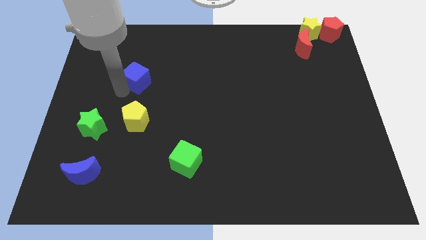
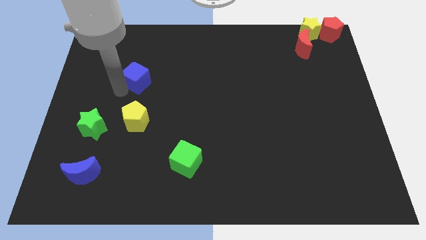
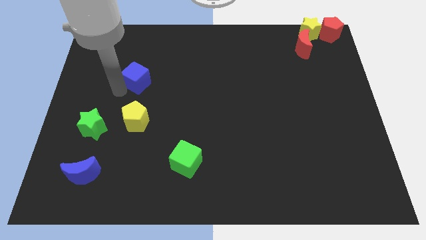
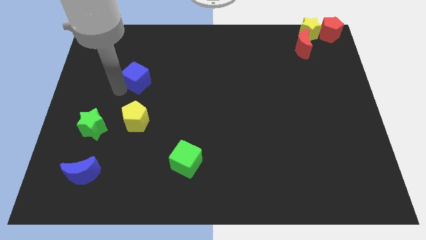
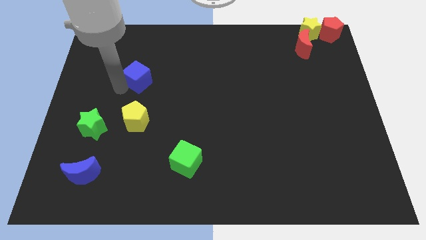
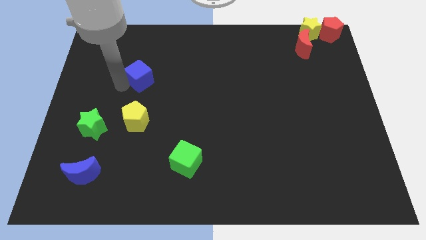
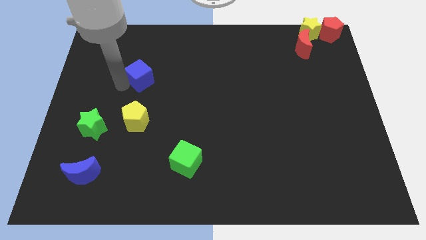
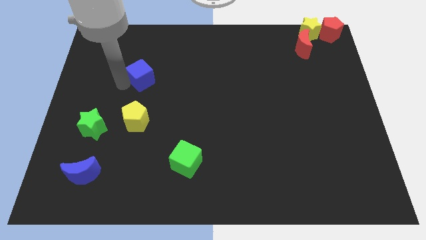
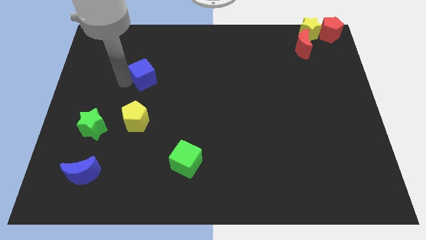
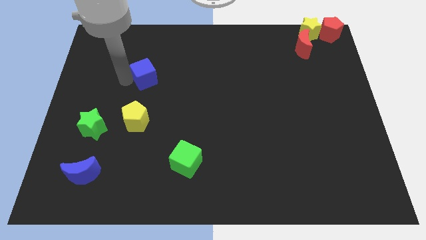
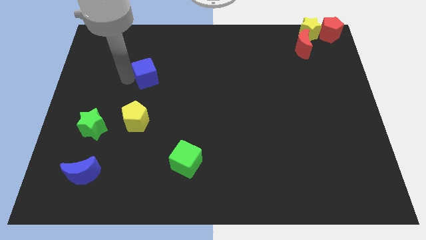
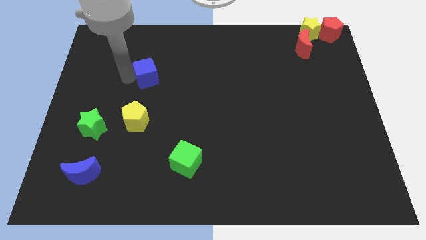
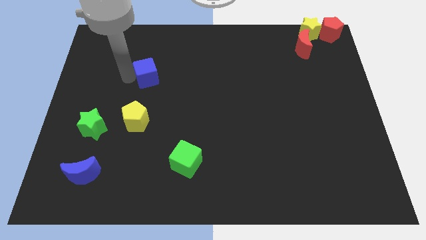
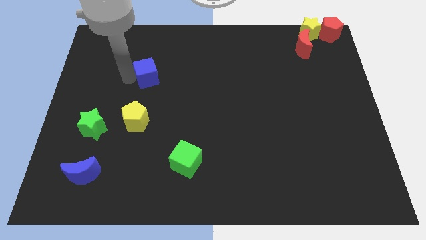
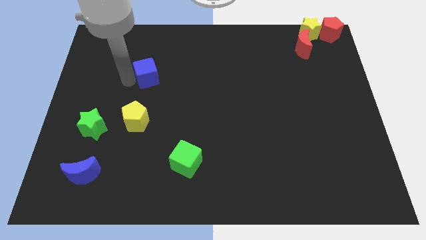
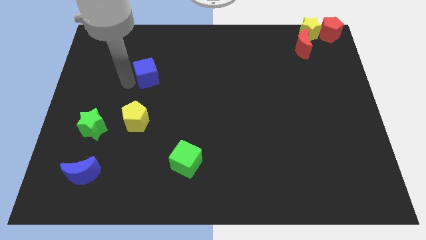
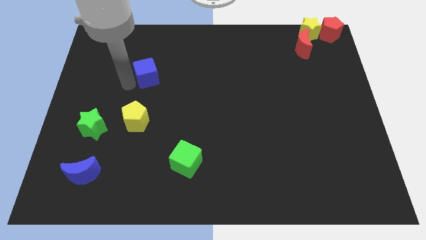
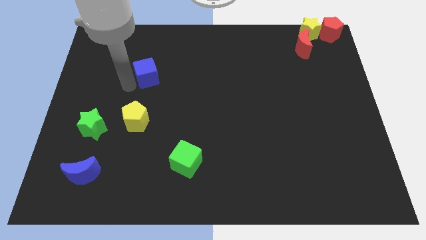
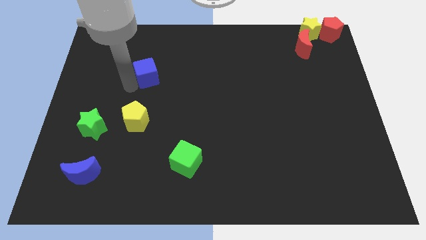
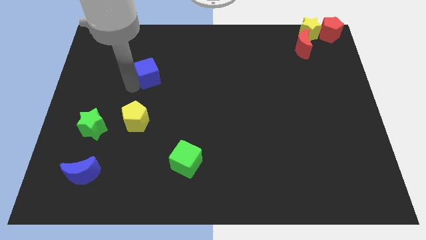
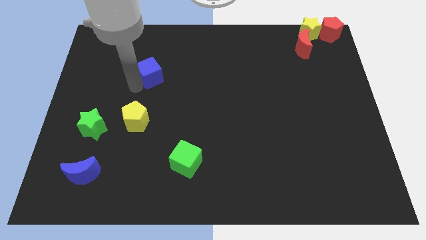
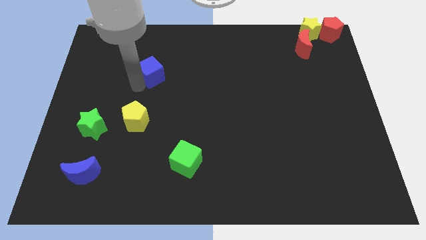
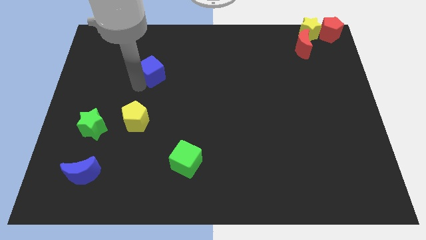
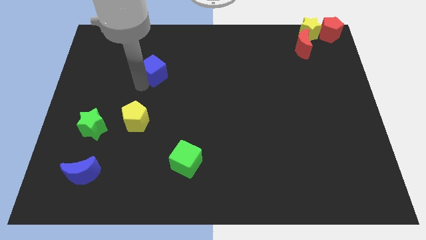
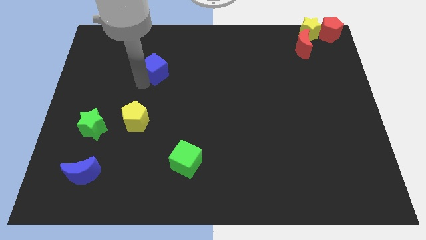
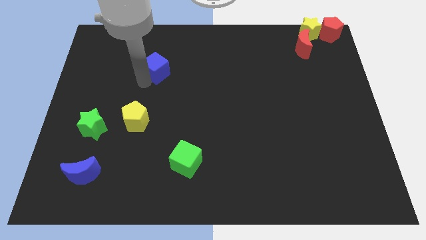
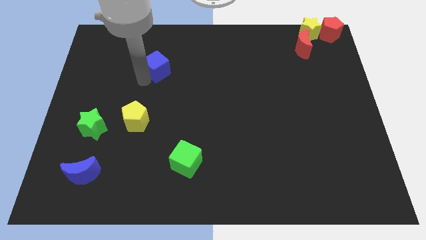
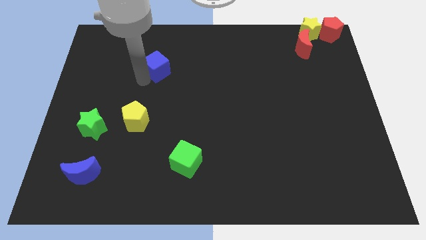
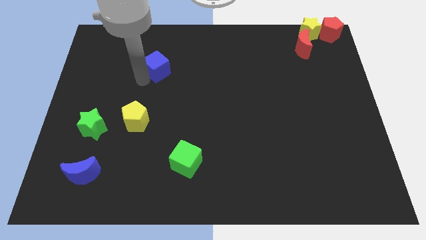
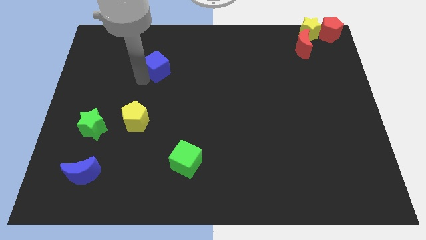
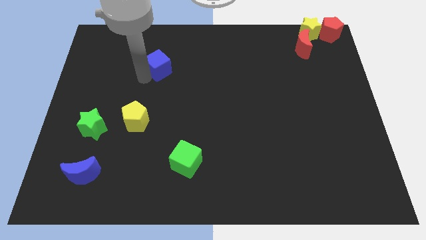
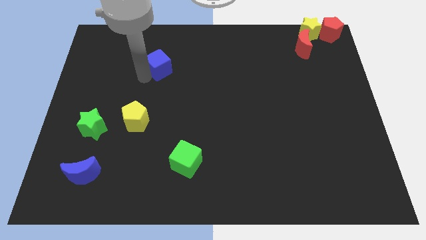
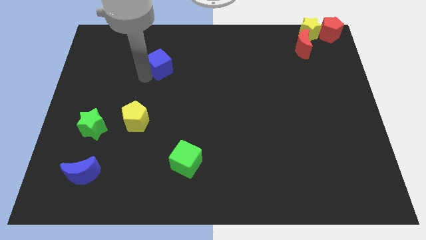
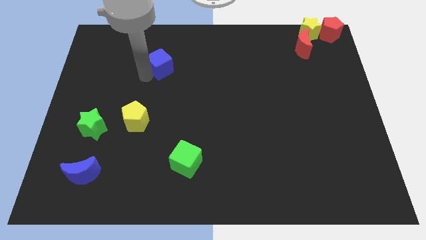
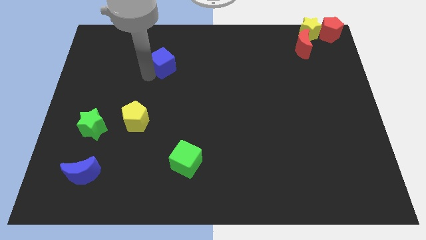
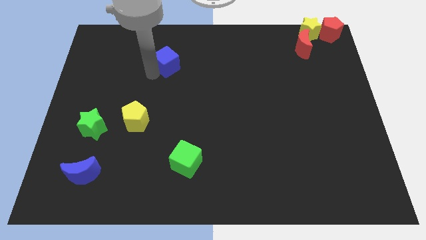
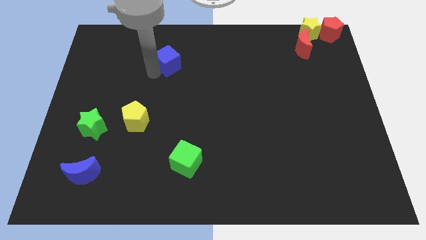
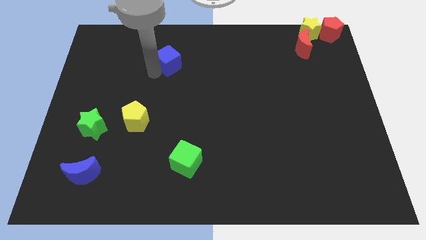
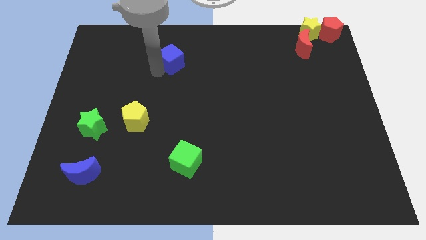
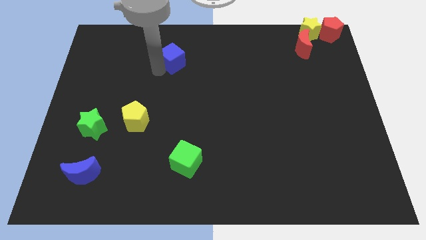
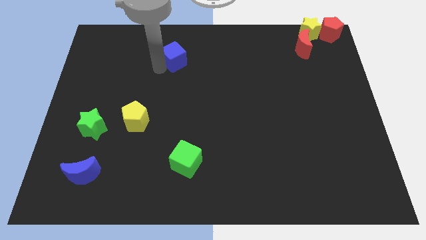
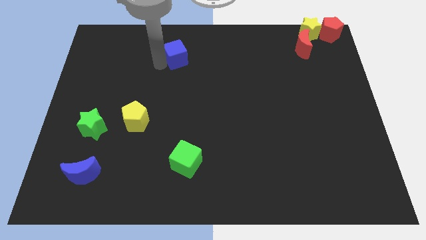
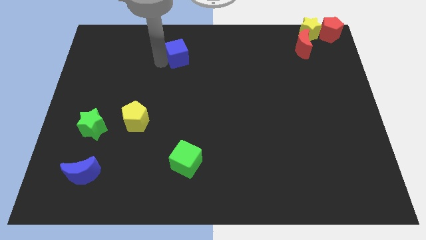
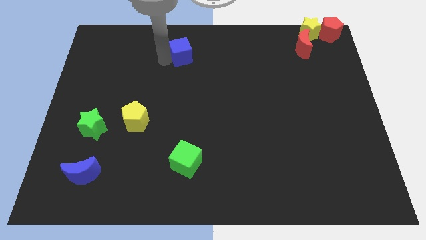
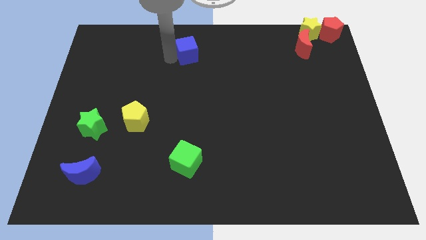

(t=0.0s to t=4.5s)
place the blue cube diagonal to the yellow pentagon

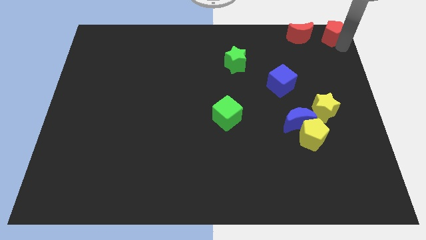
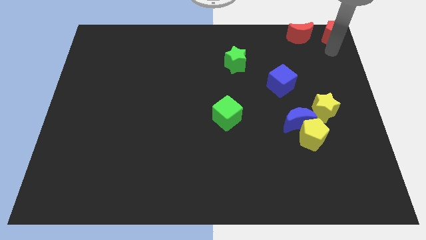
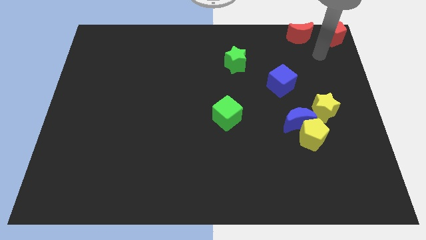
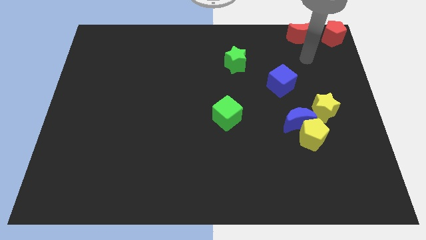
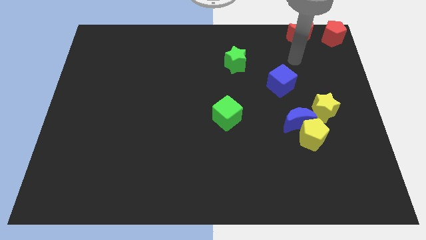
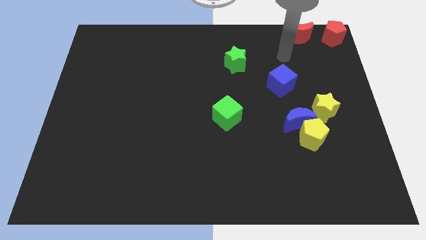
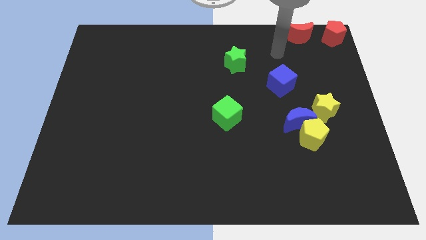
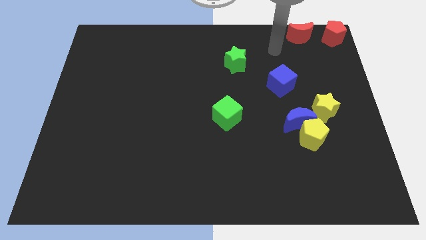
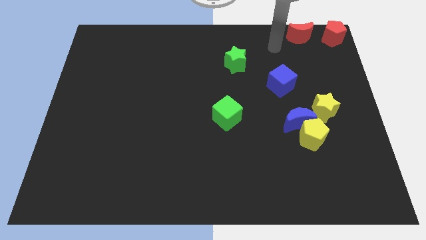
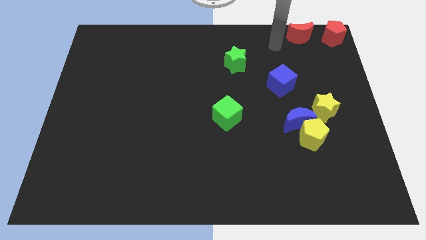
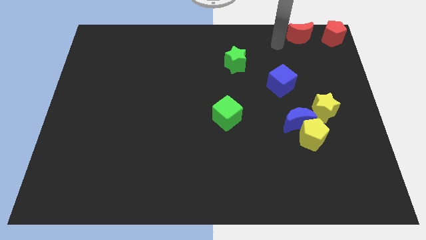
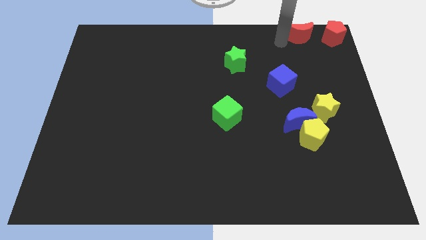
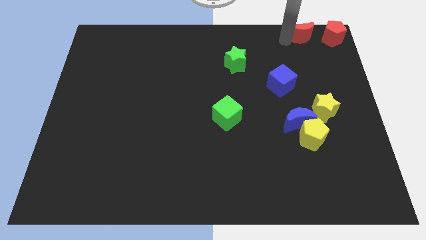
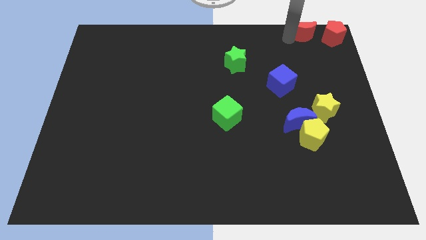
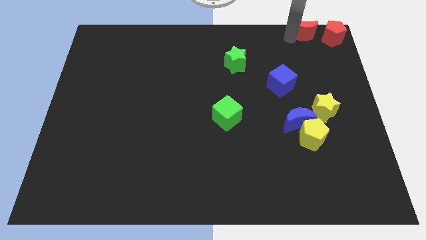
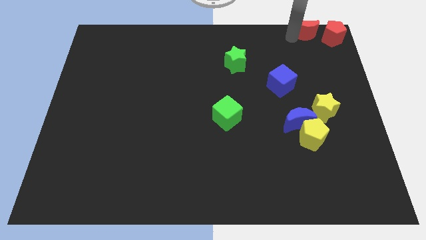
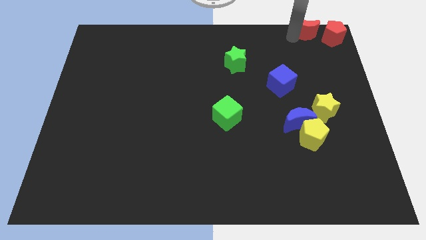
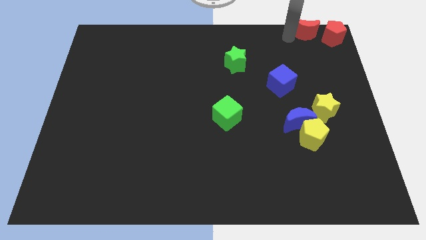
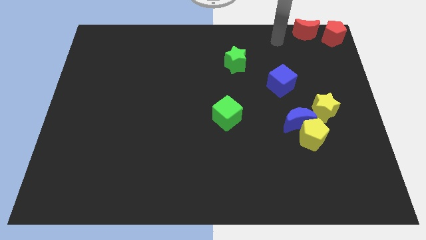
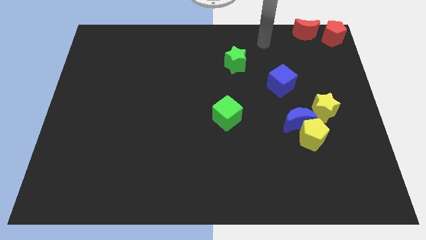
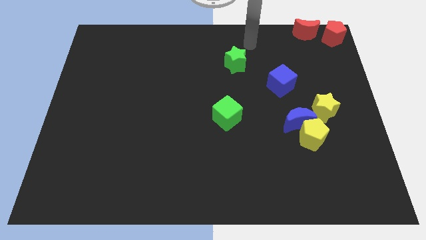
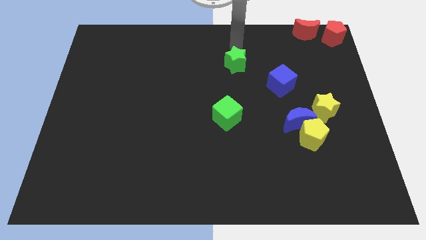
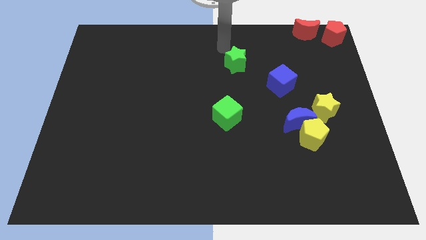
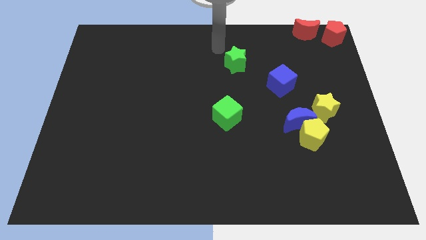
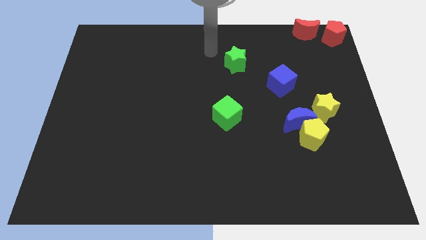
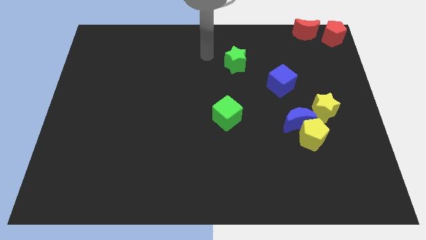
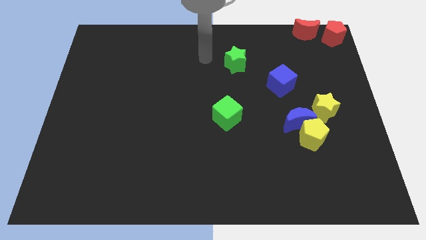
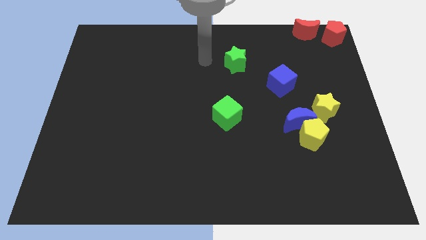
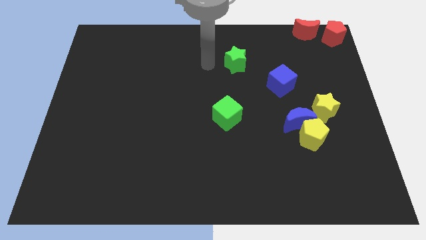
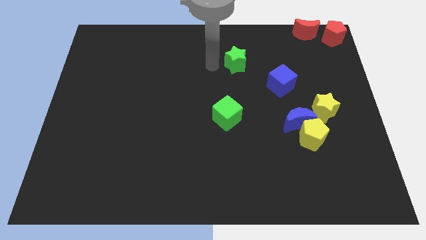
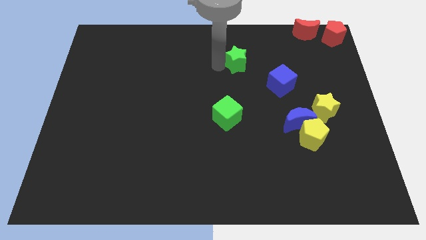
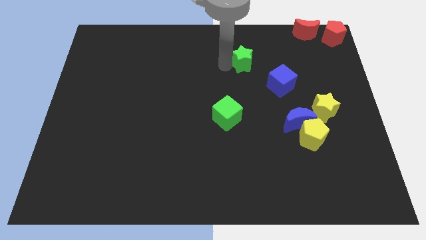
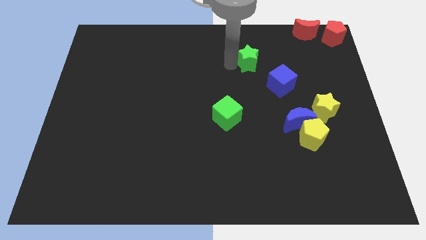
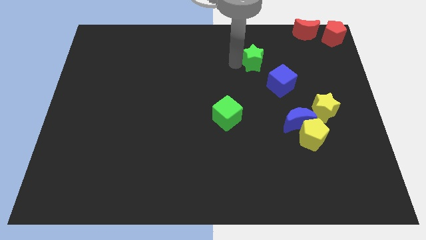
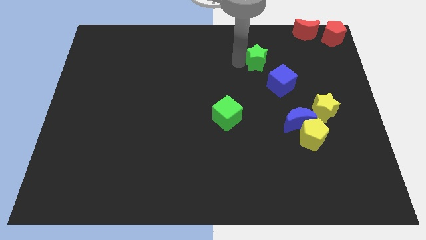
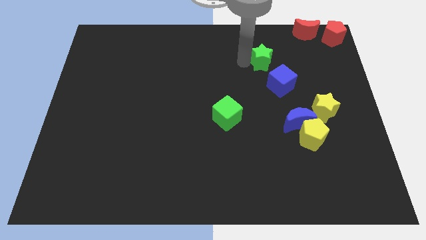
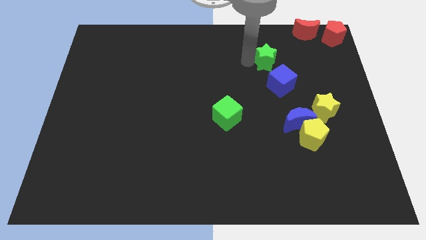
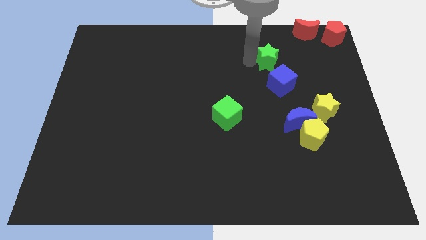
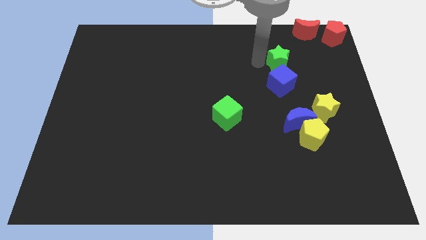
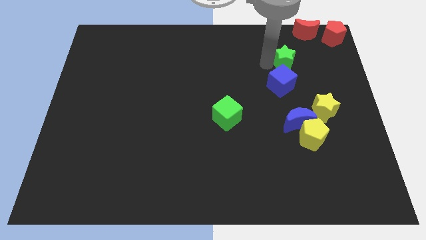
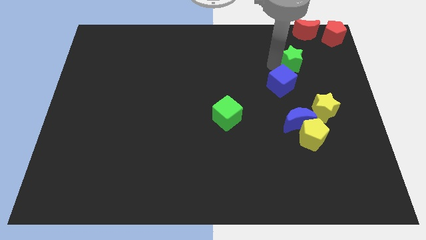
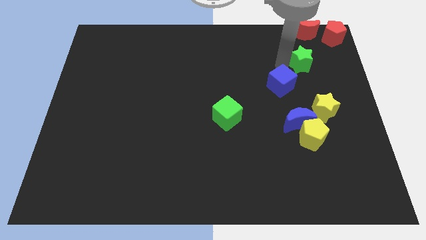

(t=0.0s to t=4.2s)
move the green star to the top of the blue cube

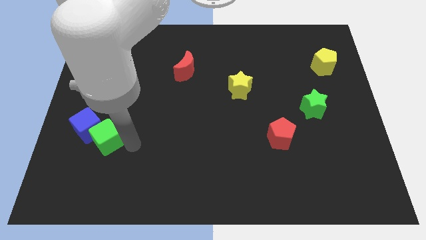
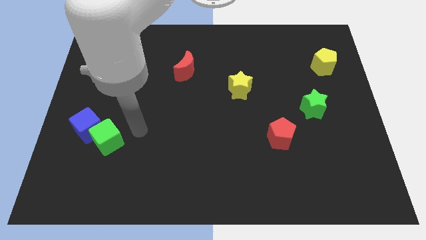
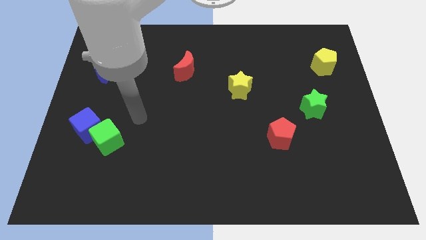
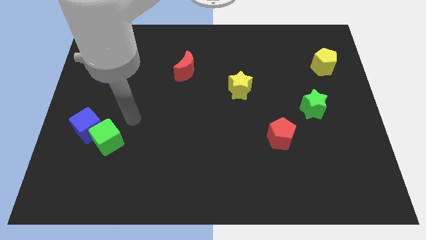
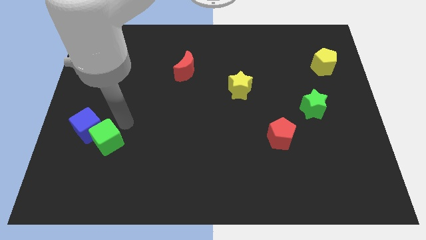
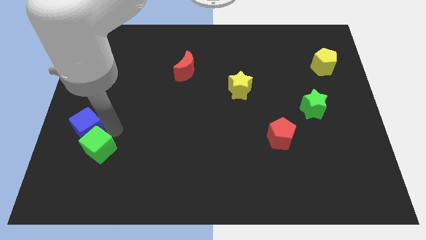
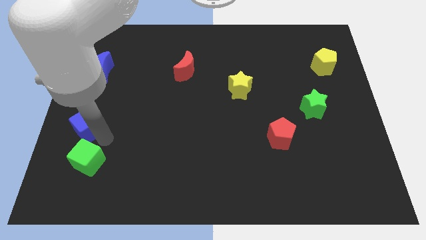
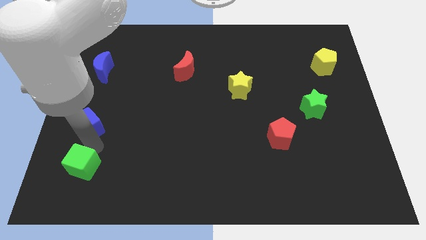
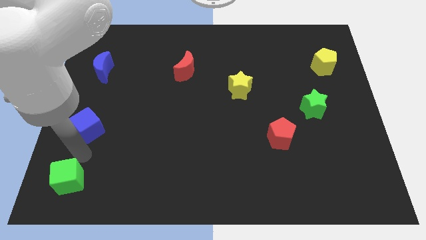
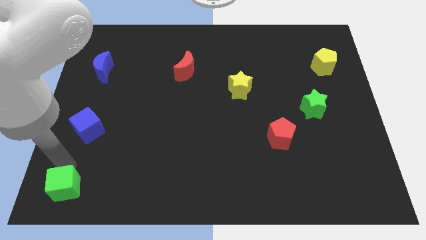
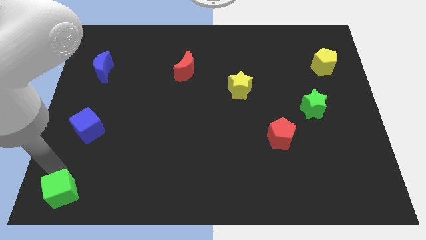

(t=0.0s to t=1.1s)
move the green cube to the bottom left
